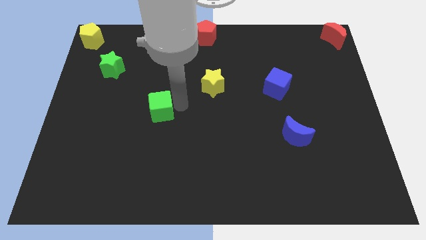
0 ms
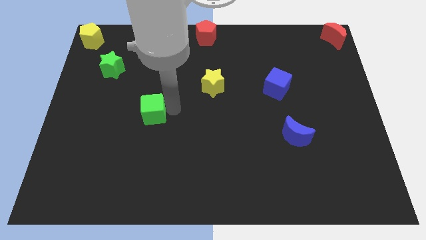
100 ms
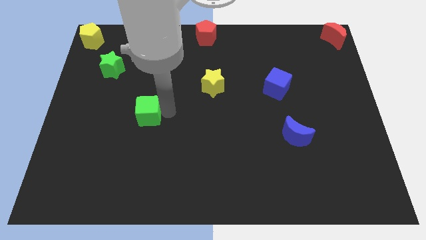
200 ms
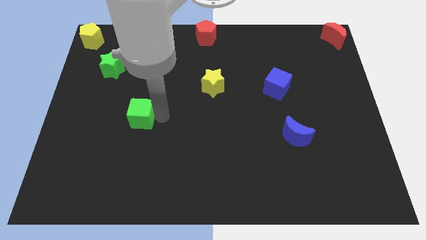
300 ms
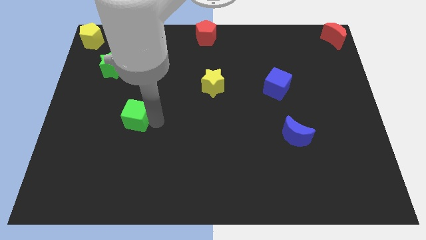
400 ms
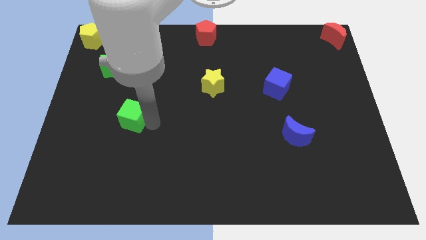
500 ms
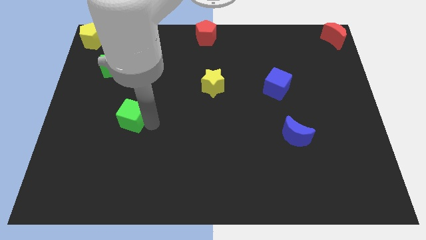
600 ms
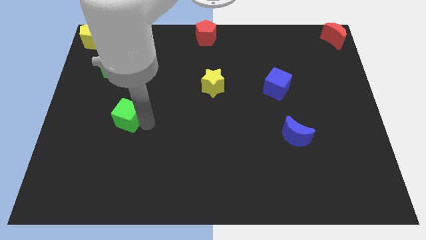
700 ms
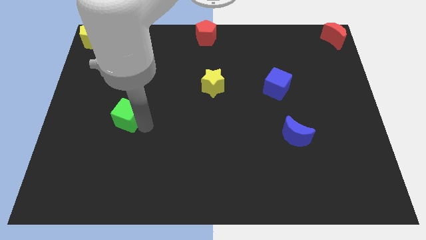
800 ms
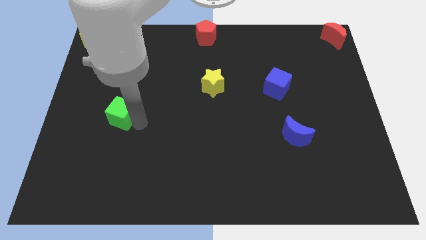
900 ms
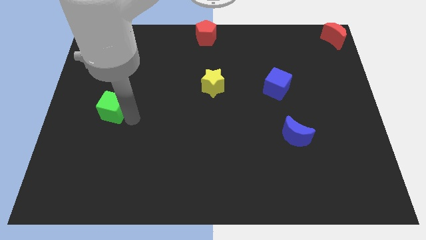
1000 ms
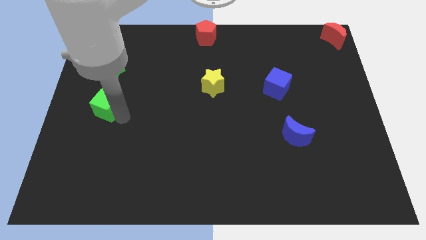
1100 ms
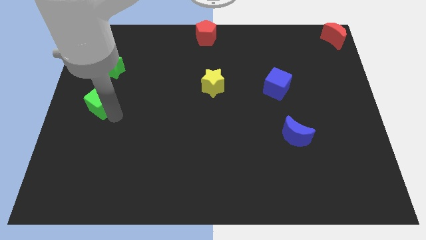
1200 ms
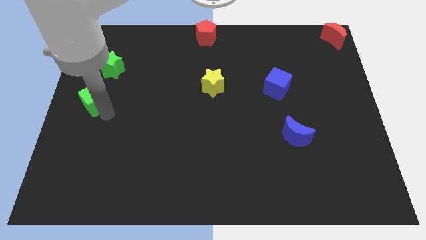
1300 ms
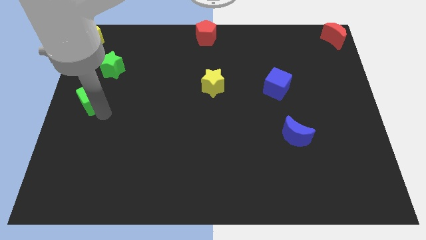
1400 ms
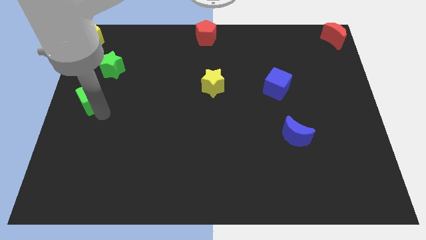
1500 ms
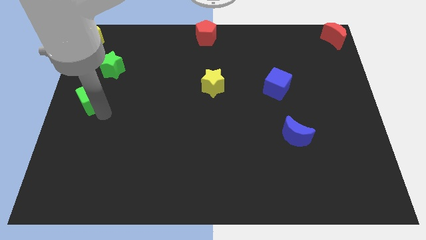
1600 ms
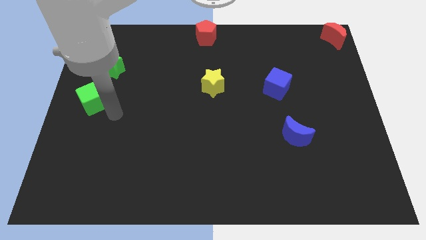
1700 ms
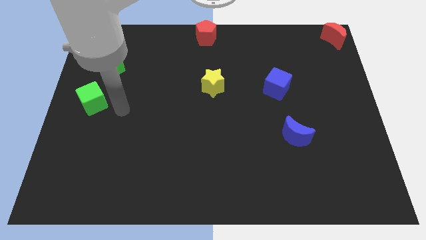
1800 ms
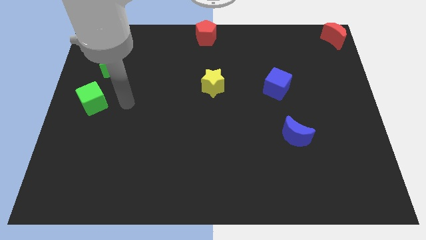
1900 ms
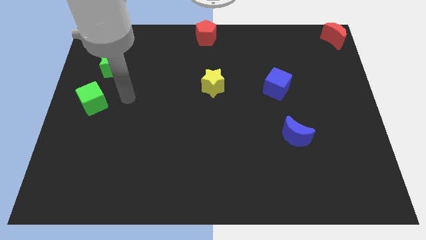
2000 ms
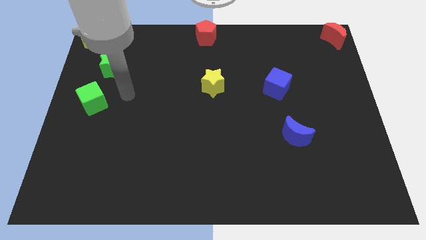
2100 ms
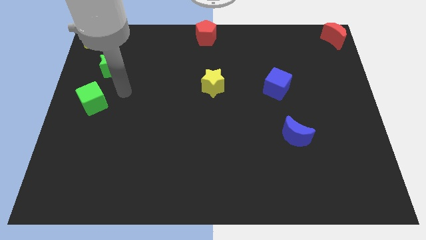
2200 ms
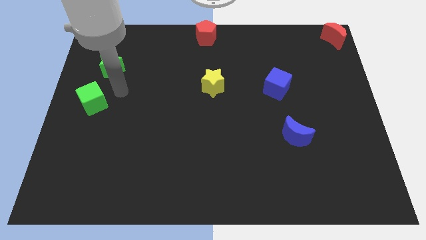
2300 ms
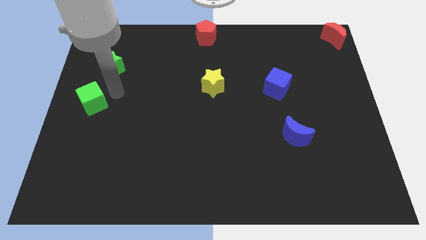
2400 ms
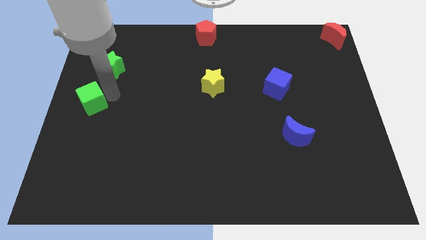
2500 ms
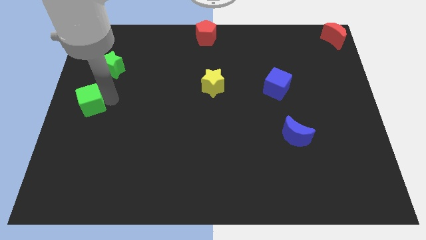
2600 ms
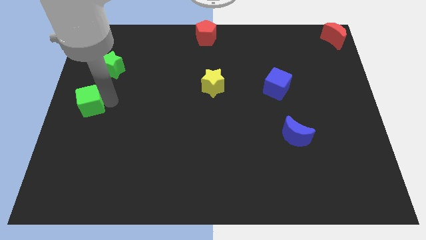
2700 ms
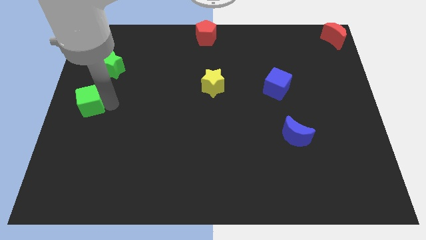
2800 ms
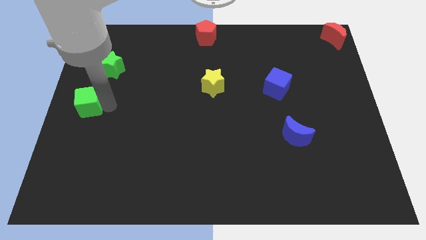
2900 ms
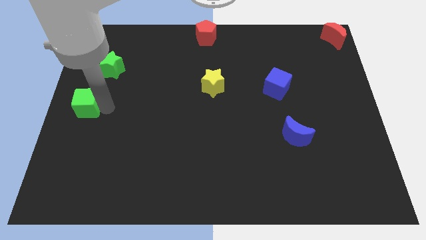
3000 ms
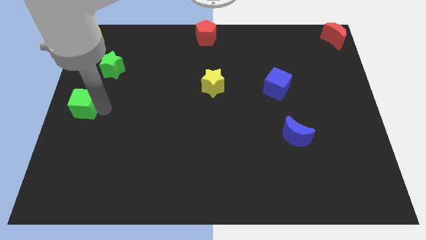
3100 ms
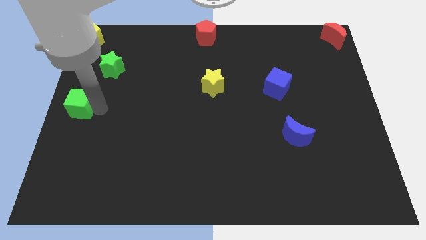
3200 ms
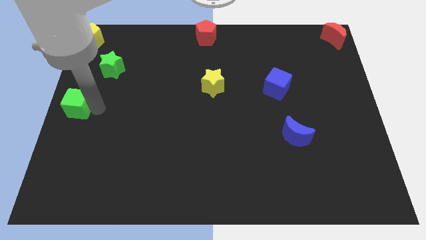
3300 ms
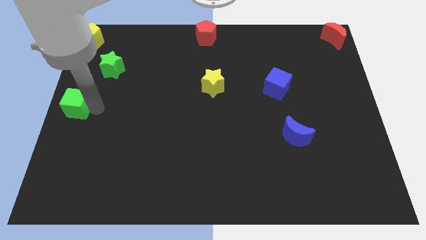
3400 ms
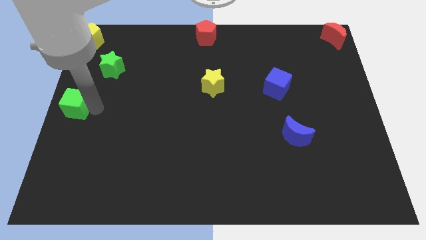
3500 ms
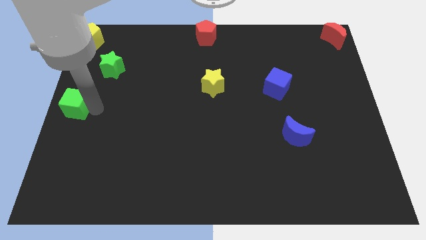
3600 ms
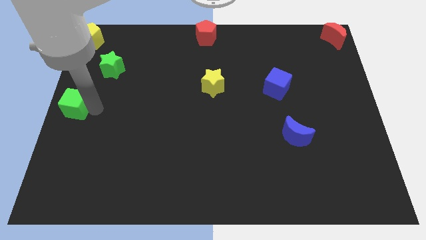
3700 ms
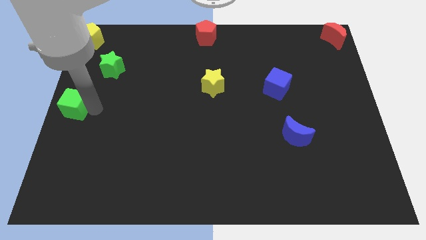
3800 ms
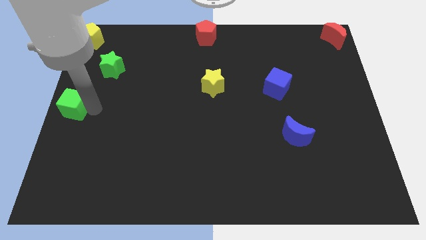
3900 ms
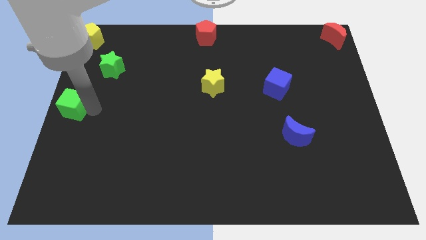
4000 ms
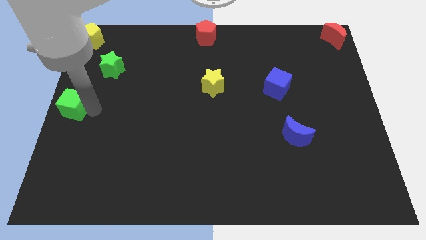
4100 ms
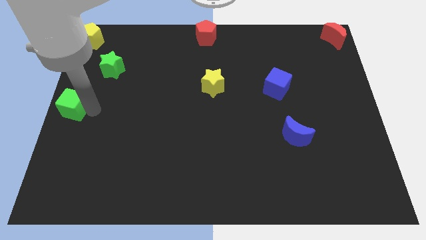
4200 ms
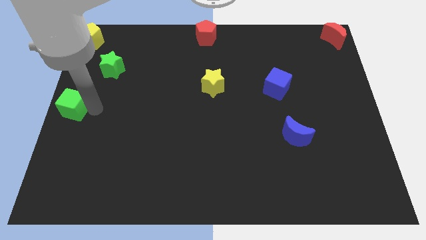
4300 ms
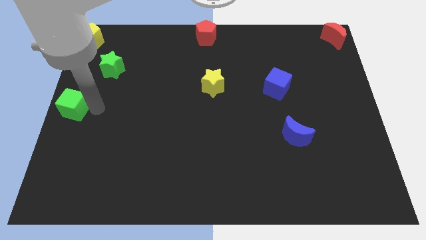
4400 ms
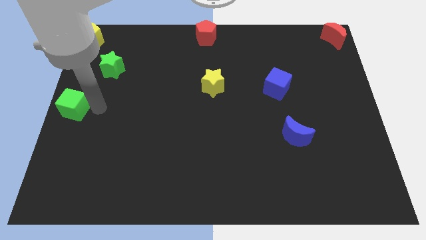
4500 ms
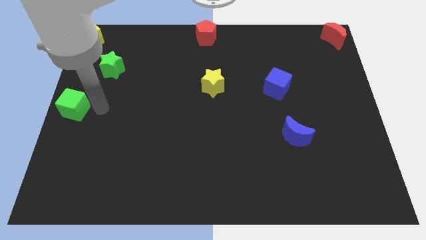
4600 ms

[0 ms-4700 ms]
place the green cube to the left center of the board

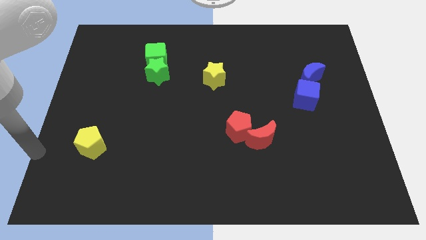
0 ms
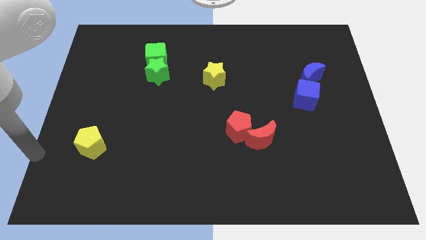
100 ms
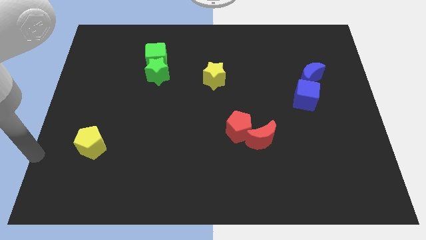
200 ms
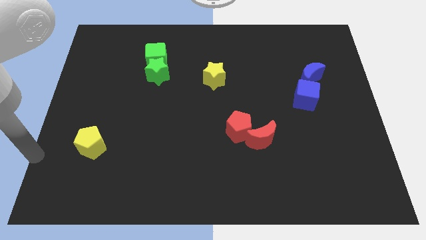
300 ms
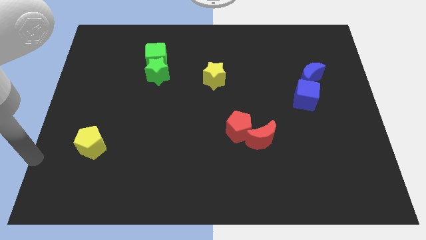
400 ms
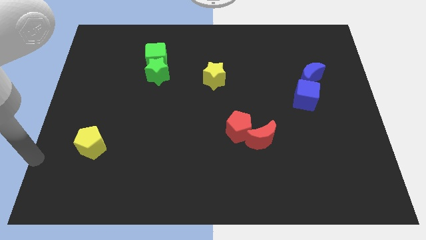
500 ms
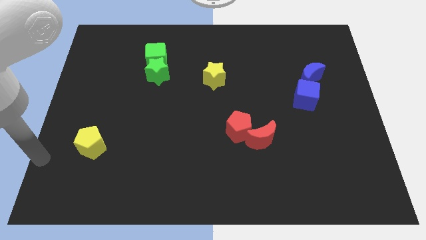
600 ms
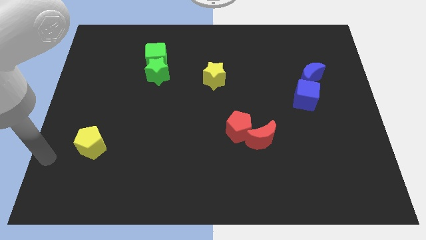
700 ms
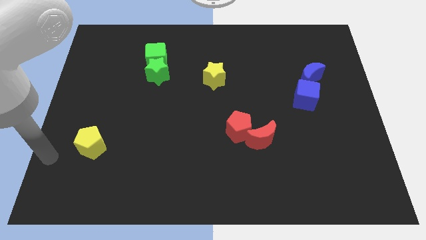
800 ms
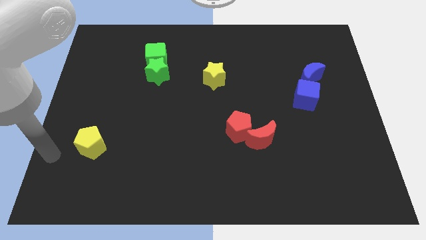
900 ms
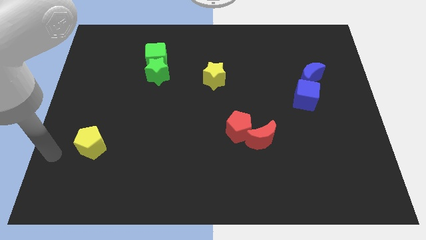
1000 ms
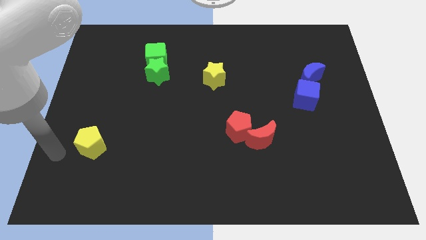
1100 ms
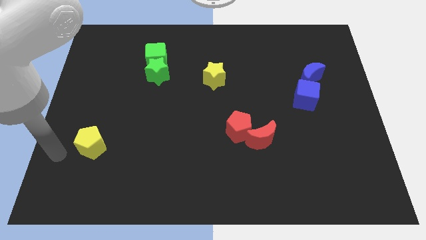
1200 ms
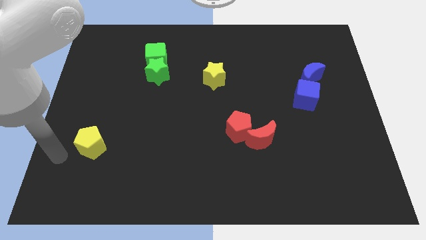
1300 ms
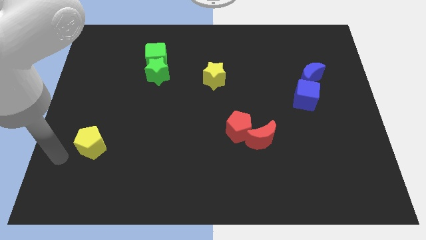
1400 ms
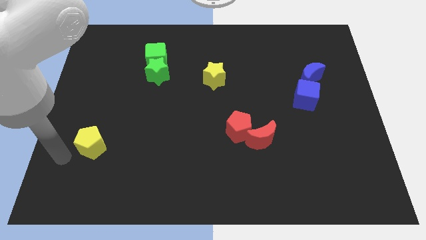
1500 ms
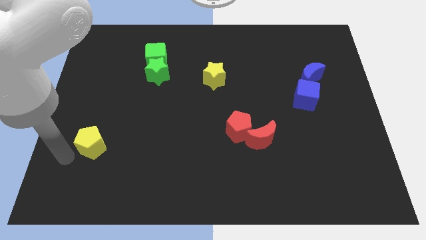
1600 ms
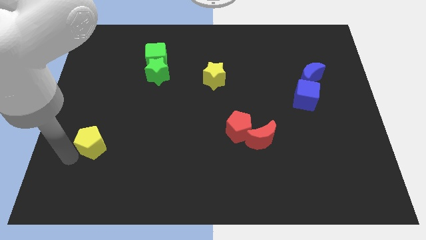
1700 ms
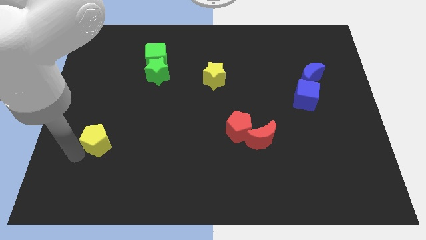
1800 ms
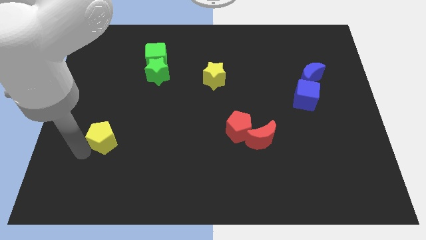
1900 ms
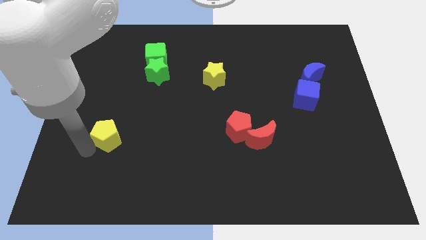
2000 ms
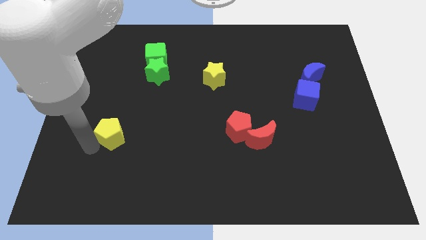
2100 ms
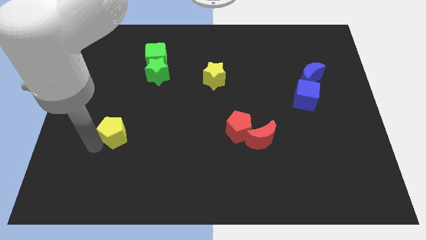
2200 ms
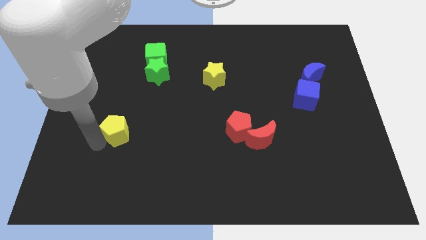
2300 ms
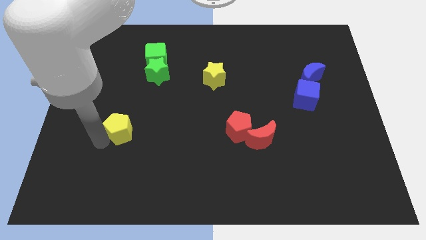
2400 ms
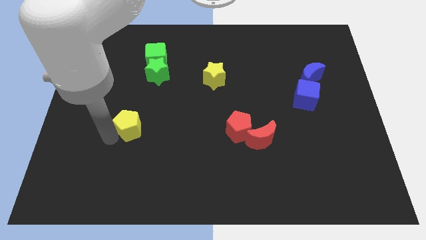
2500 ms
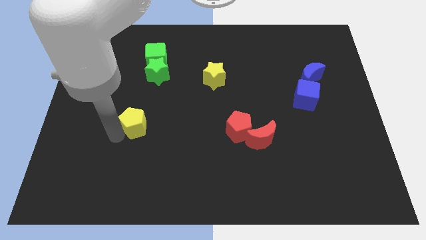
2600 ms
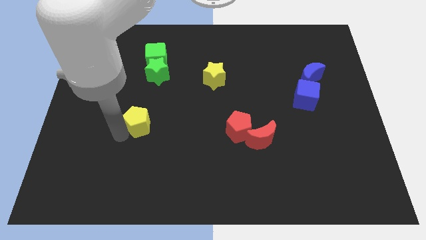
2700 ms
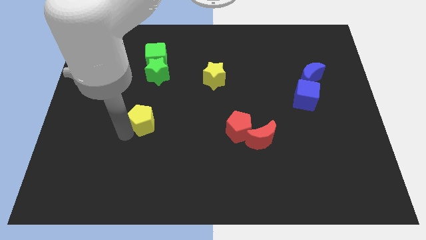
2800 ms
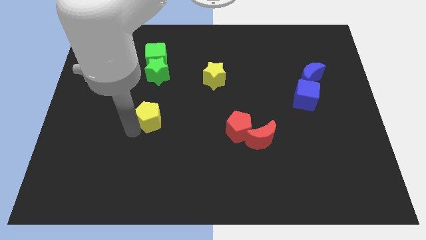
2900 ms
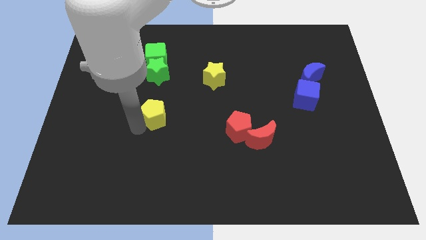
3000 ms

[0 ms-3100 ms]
put the yellow pentagon vertically below the group of green blocks

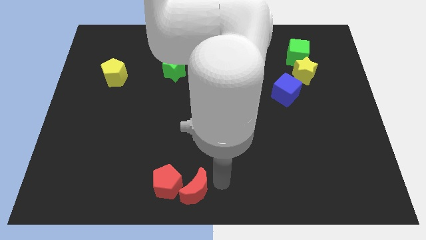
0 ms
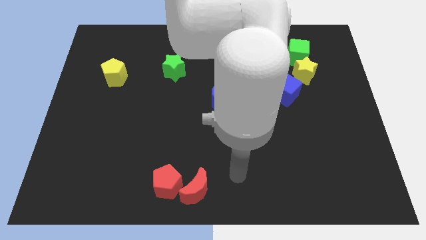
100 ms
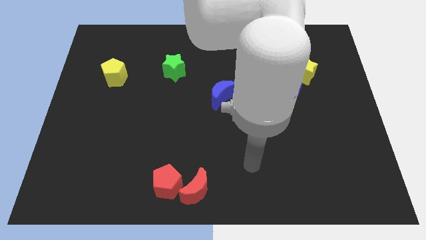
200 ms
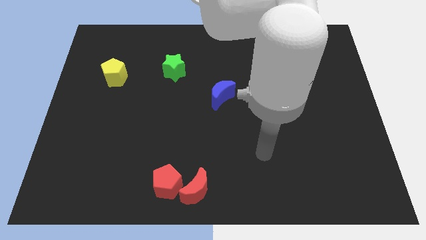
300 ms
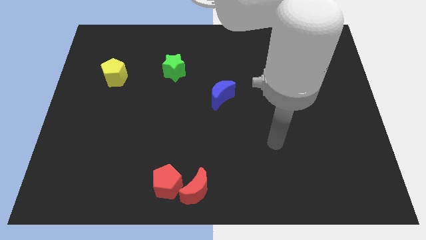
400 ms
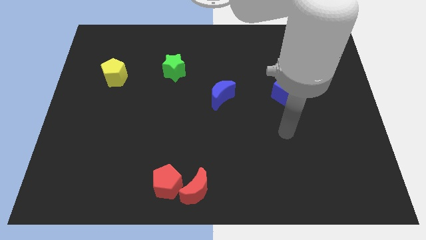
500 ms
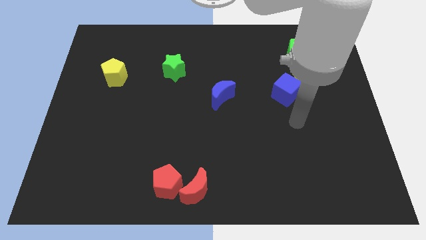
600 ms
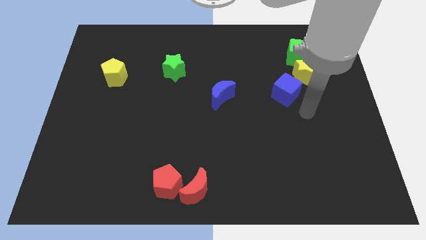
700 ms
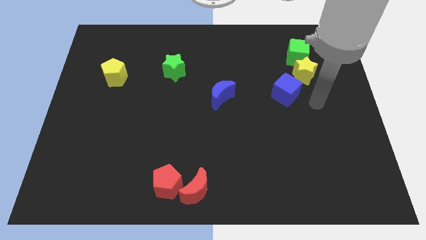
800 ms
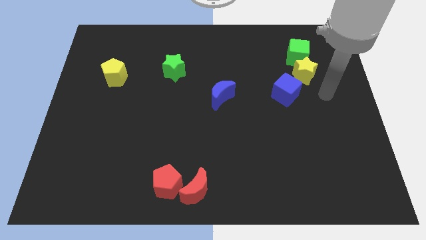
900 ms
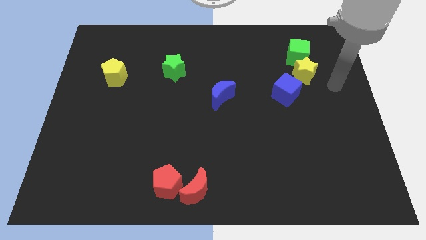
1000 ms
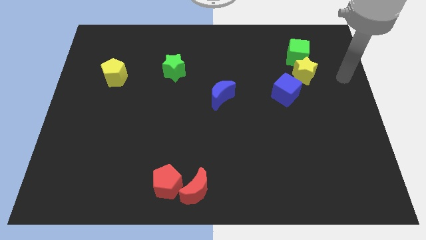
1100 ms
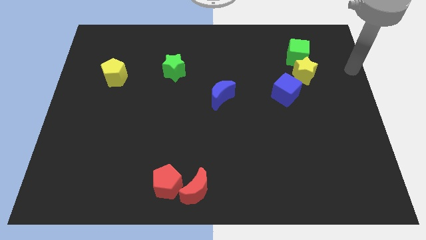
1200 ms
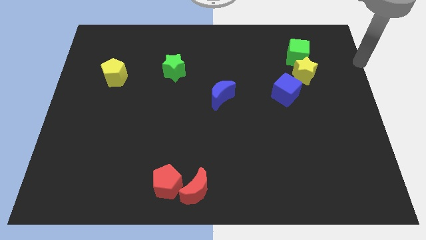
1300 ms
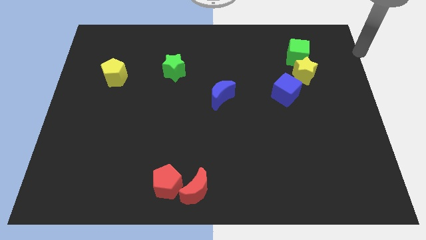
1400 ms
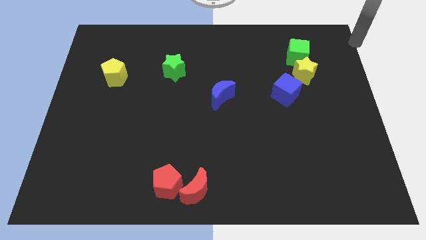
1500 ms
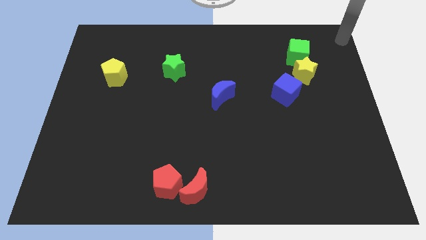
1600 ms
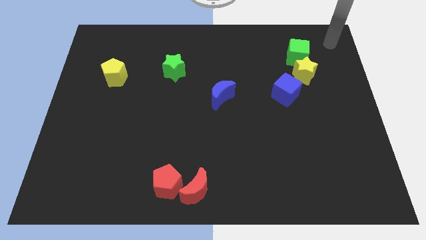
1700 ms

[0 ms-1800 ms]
move your arm on top right of the board
